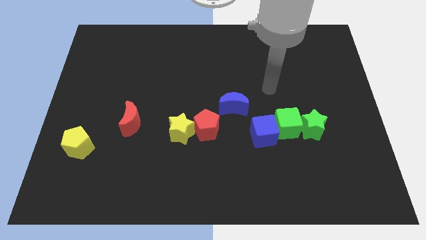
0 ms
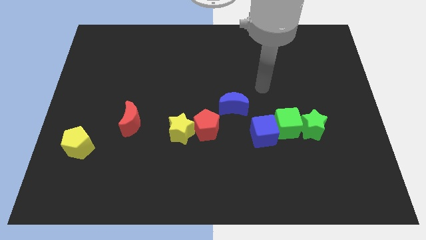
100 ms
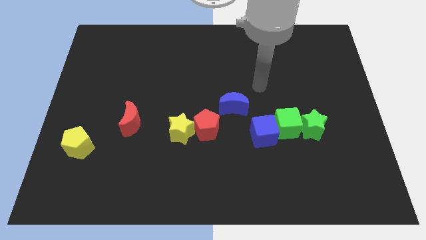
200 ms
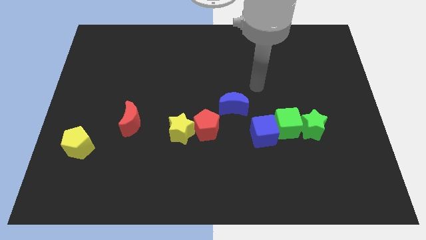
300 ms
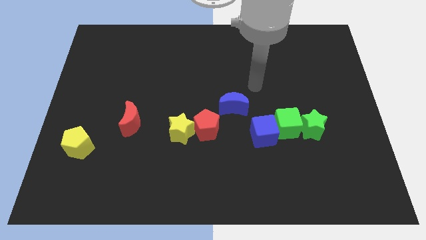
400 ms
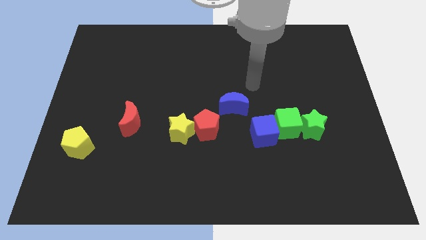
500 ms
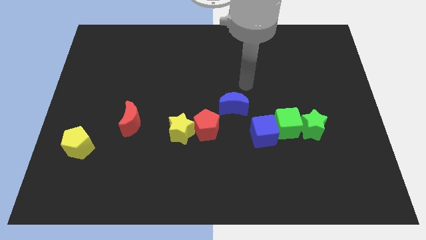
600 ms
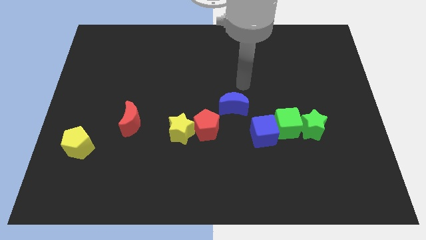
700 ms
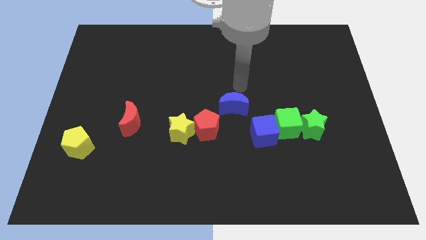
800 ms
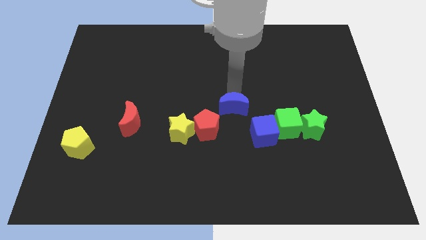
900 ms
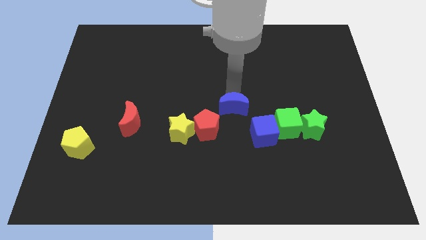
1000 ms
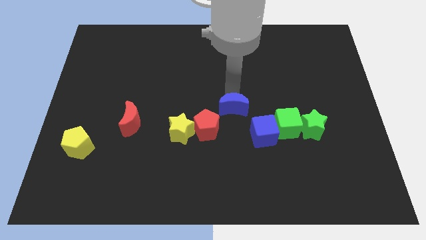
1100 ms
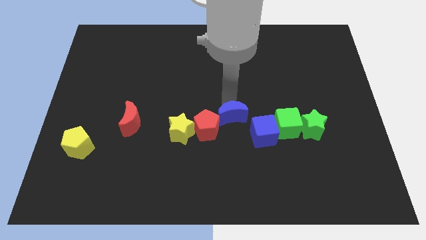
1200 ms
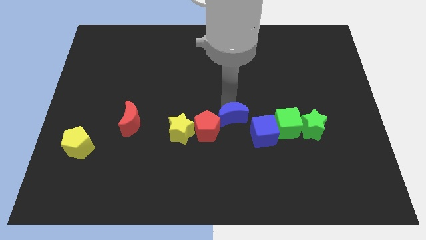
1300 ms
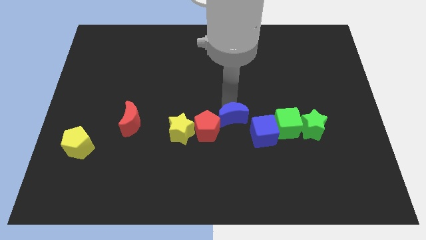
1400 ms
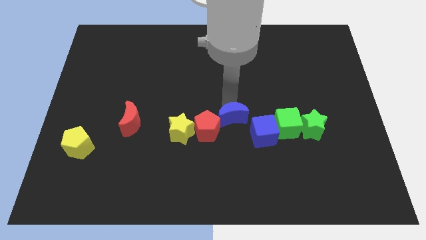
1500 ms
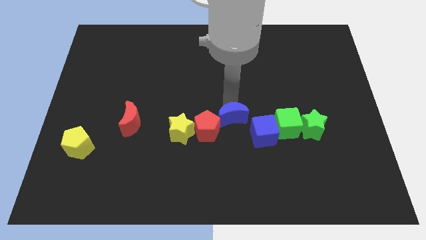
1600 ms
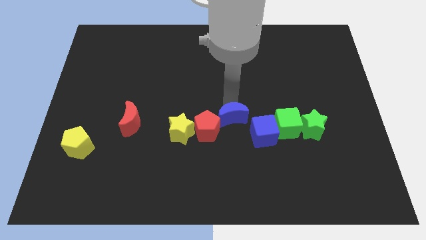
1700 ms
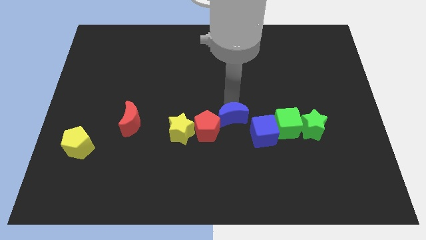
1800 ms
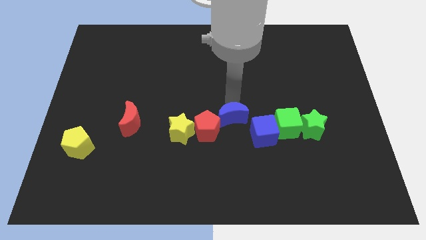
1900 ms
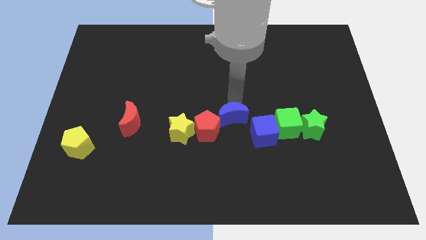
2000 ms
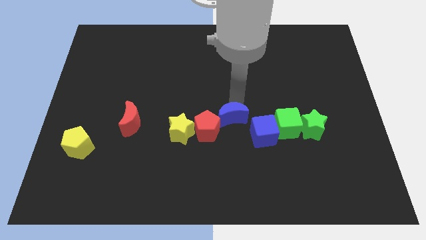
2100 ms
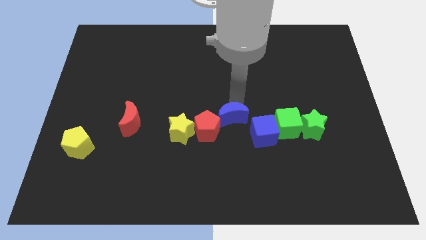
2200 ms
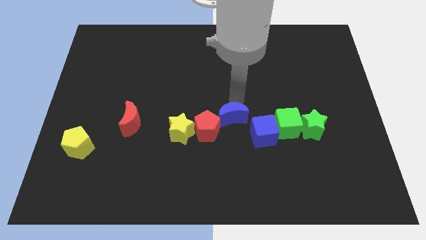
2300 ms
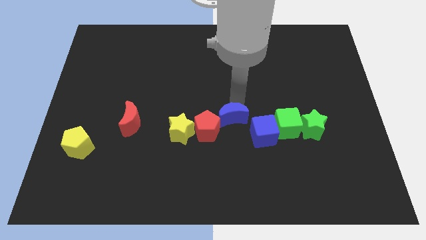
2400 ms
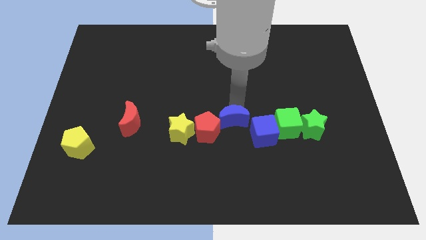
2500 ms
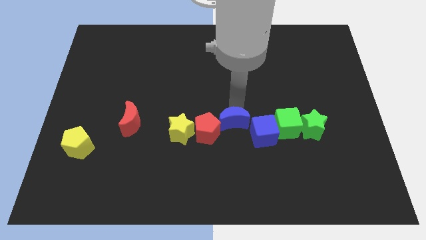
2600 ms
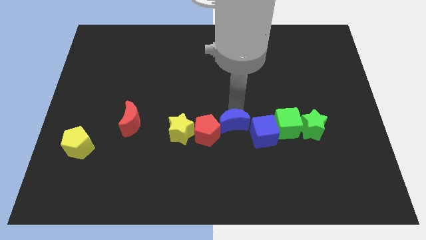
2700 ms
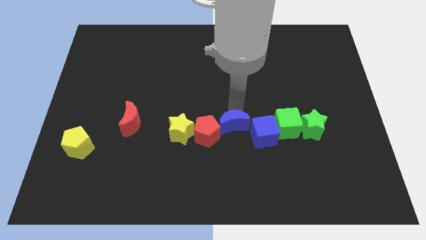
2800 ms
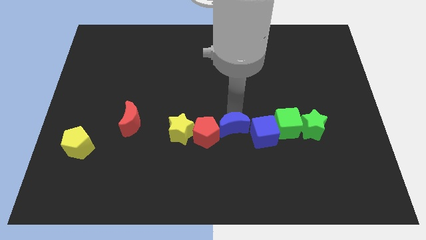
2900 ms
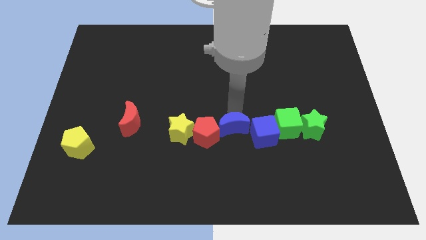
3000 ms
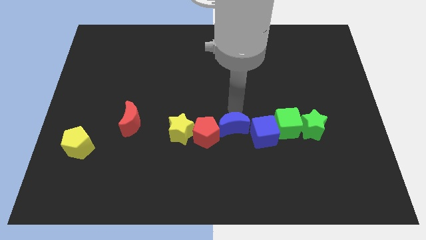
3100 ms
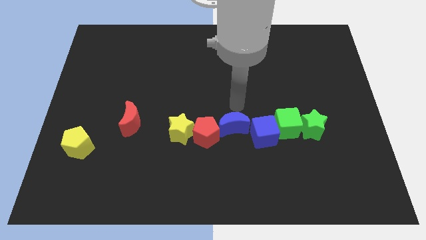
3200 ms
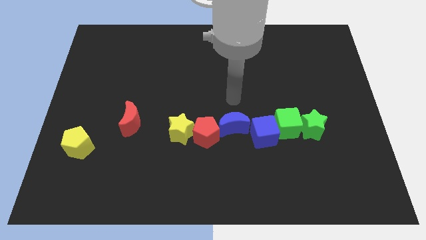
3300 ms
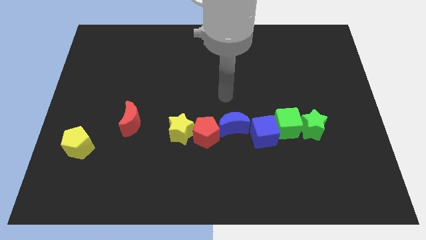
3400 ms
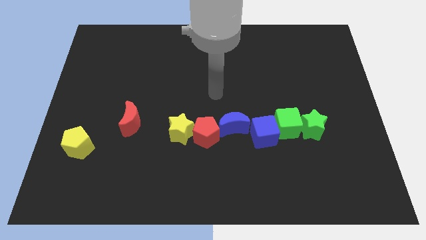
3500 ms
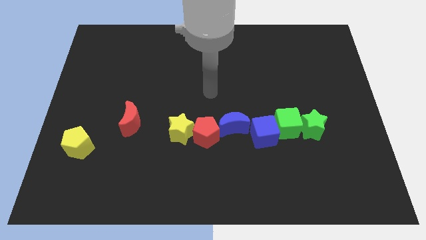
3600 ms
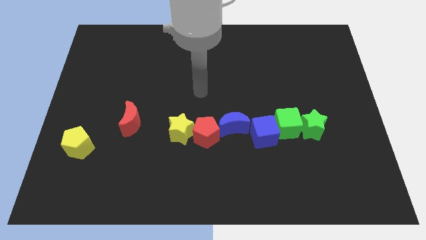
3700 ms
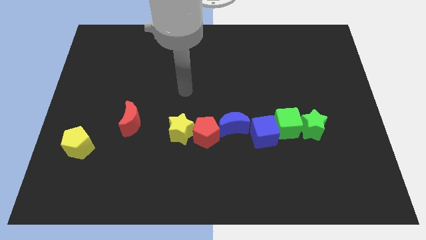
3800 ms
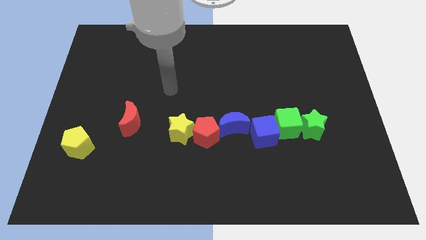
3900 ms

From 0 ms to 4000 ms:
move the blue moon to the top left side of the blue cube

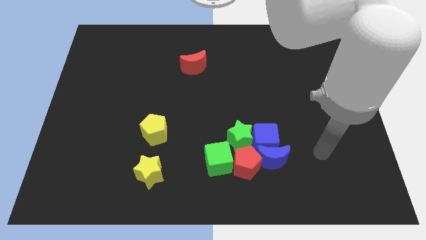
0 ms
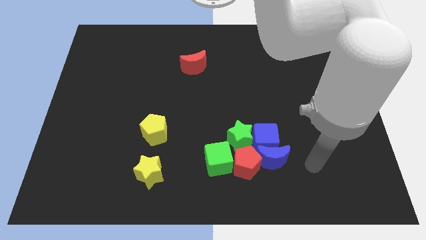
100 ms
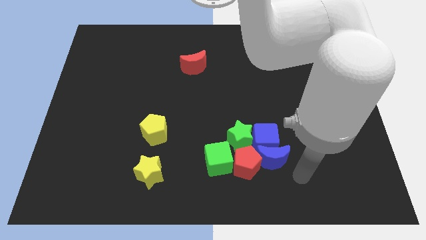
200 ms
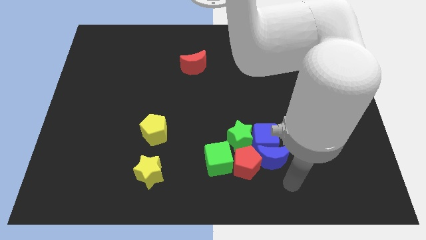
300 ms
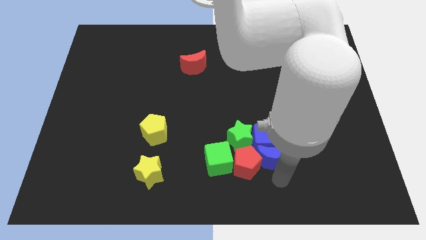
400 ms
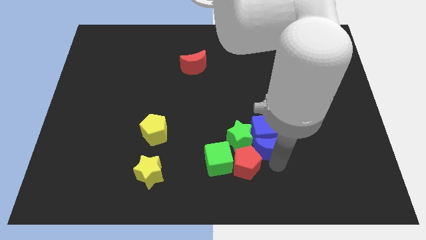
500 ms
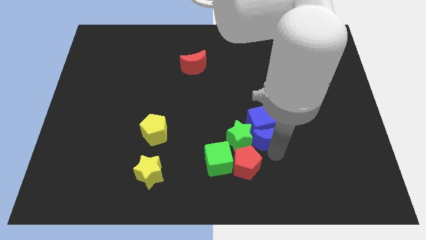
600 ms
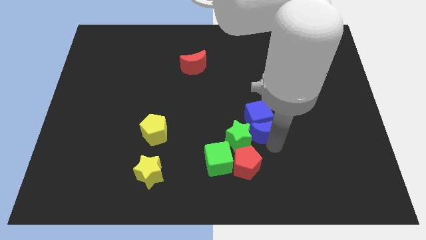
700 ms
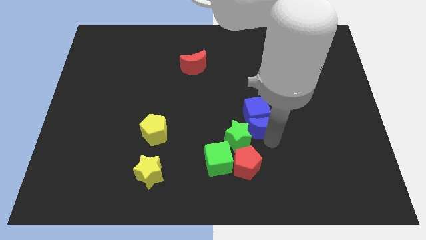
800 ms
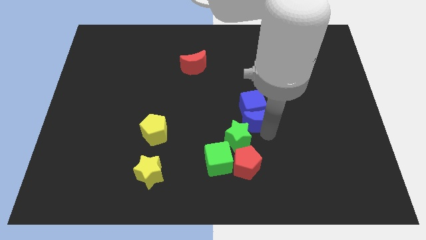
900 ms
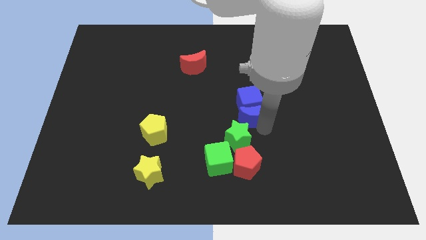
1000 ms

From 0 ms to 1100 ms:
move the blue moon into the blue cube

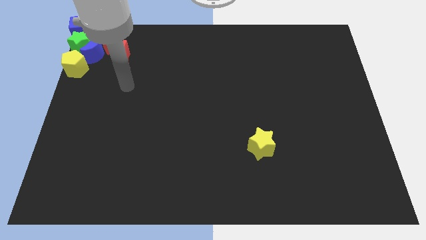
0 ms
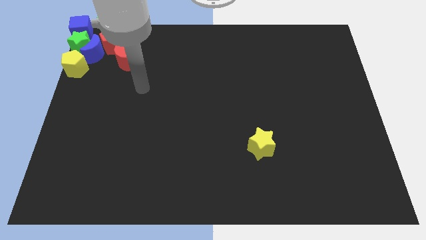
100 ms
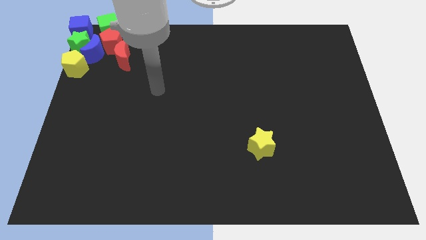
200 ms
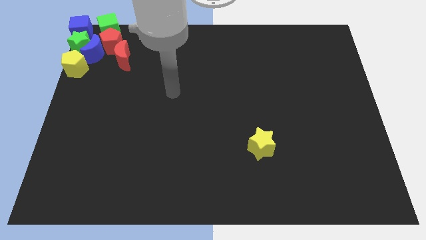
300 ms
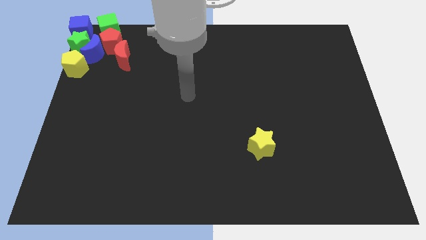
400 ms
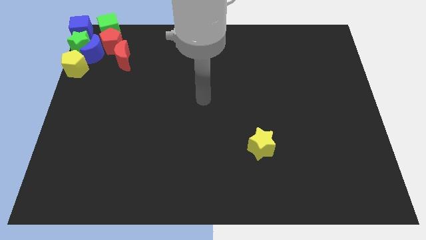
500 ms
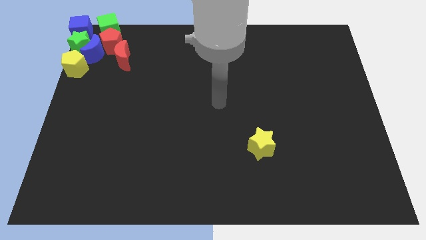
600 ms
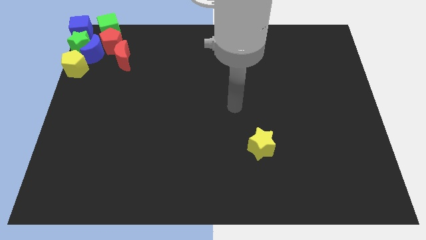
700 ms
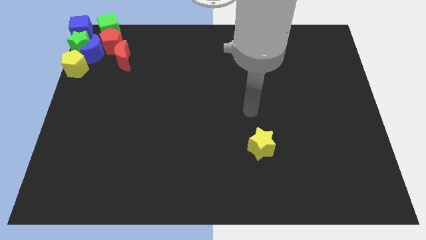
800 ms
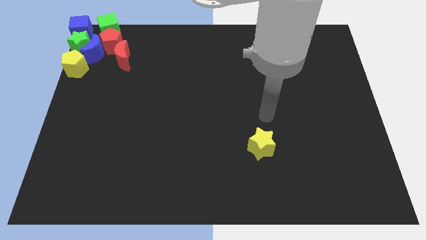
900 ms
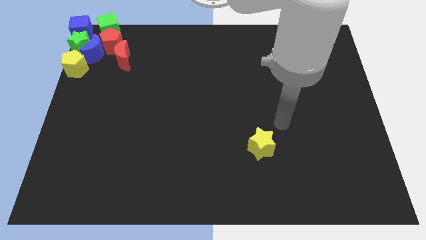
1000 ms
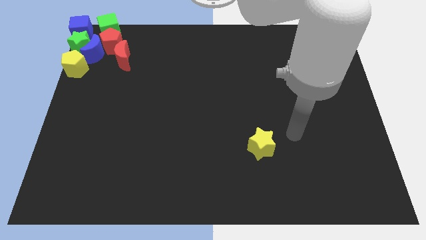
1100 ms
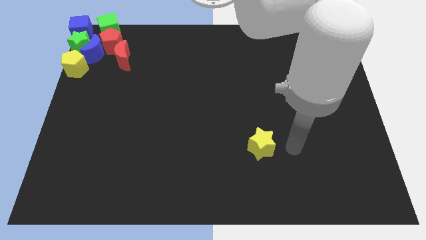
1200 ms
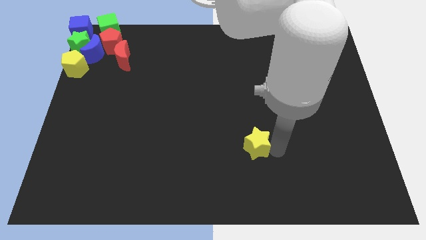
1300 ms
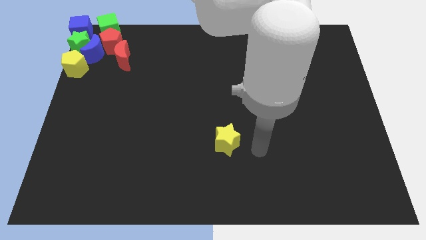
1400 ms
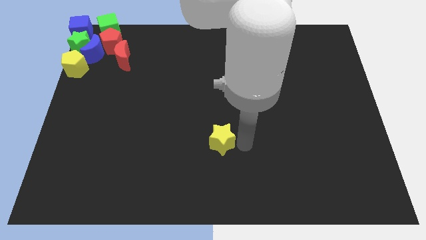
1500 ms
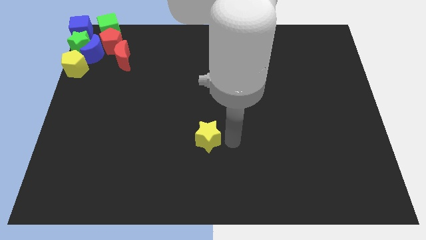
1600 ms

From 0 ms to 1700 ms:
push the yellow star towards the left side

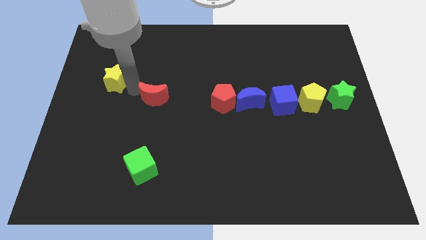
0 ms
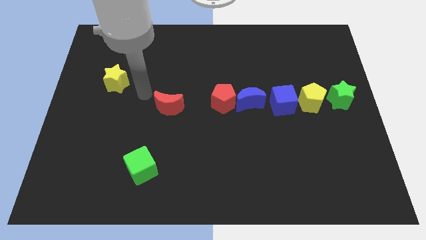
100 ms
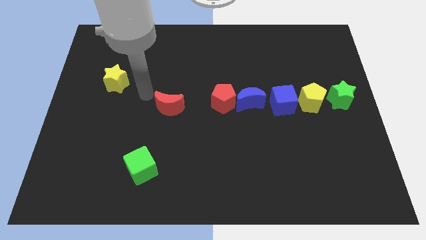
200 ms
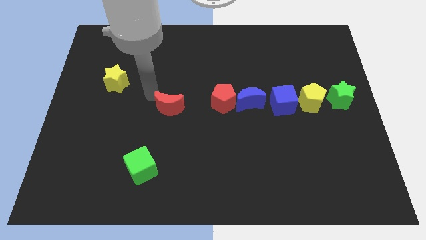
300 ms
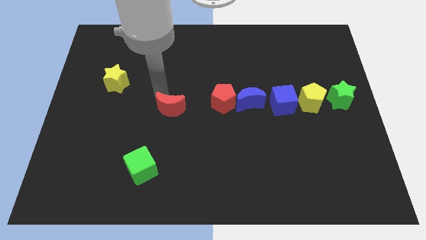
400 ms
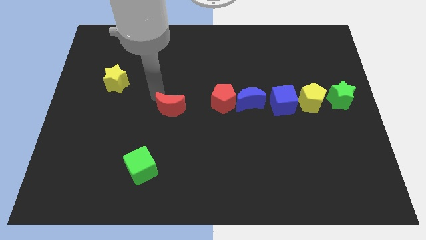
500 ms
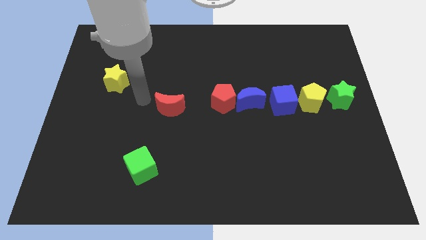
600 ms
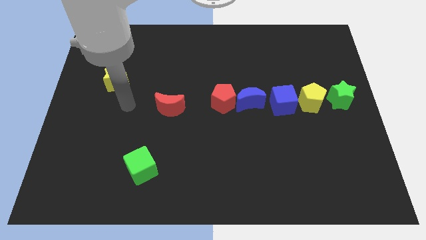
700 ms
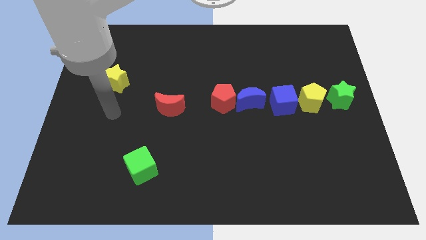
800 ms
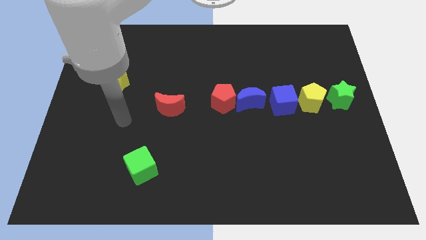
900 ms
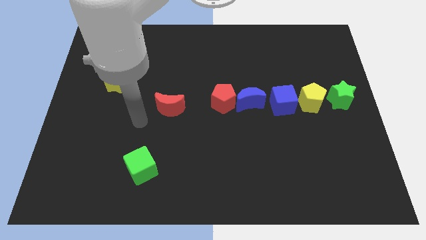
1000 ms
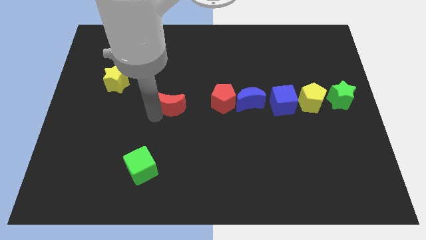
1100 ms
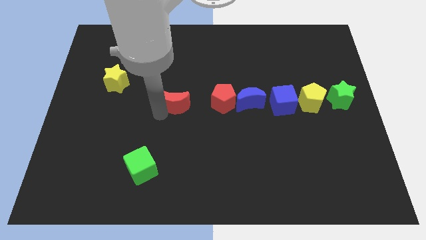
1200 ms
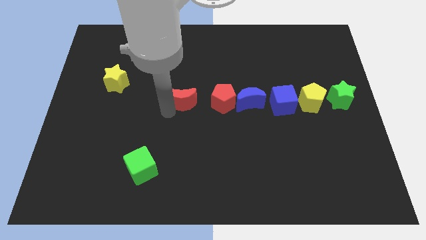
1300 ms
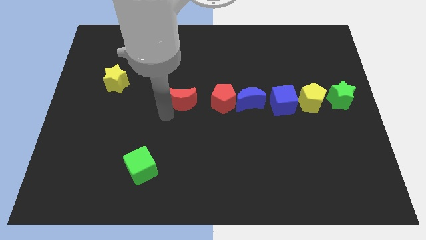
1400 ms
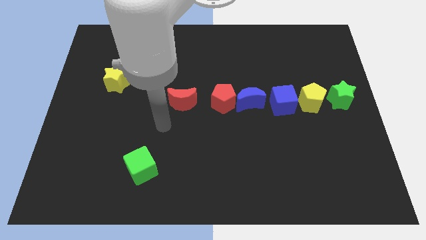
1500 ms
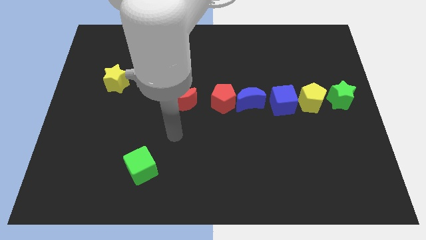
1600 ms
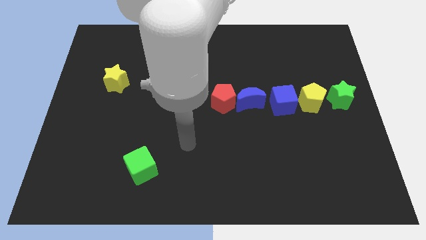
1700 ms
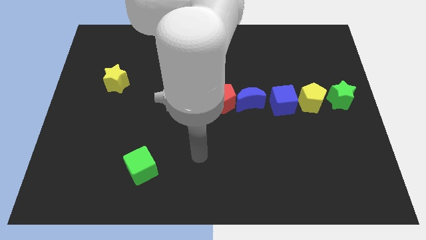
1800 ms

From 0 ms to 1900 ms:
place the red crescent at center of the board
